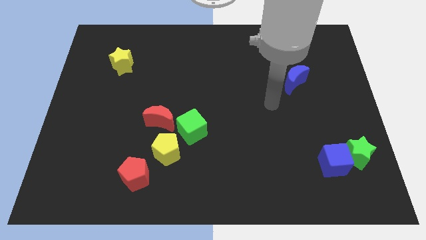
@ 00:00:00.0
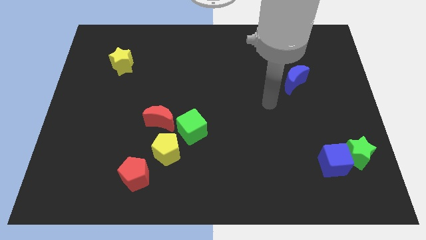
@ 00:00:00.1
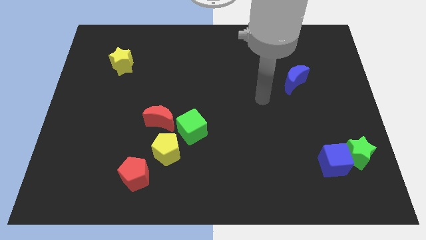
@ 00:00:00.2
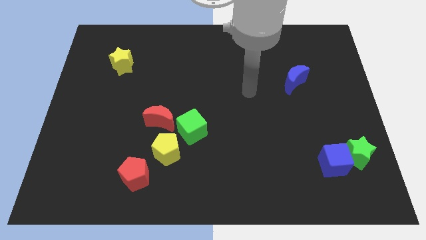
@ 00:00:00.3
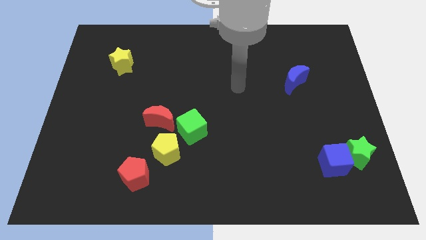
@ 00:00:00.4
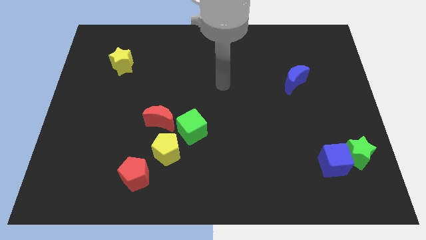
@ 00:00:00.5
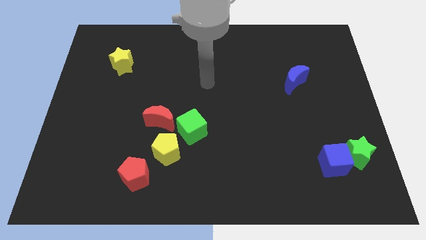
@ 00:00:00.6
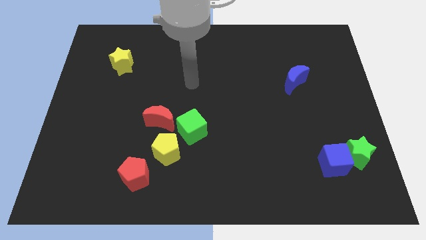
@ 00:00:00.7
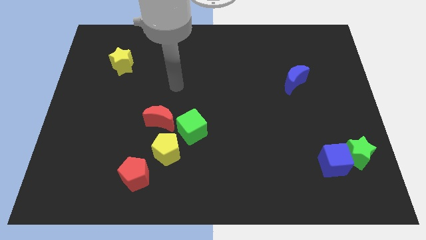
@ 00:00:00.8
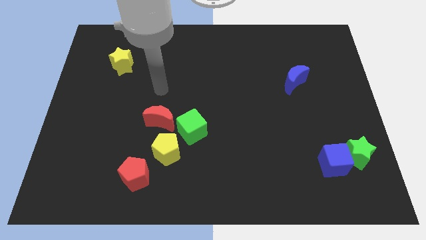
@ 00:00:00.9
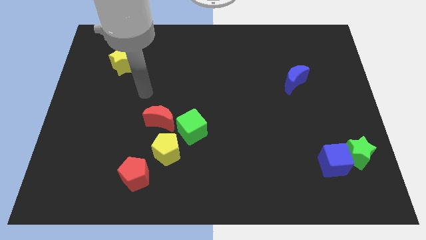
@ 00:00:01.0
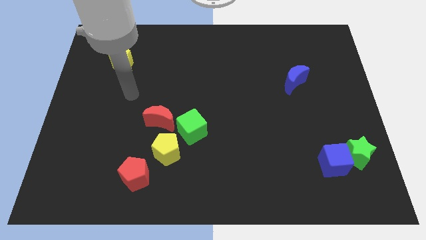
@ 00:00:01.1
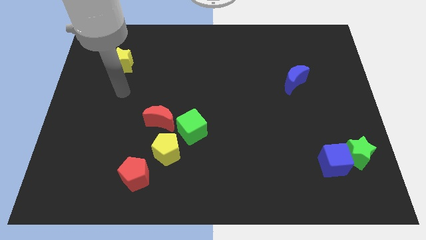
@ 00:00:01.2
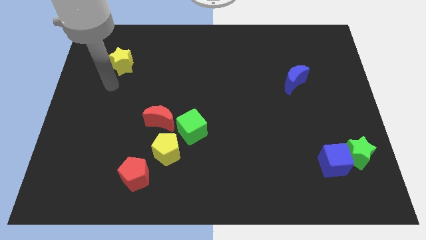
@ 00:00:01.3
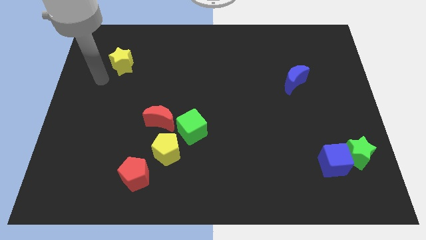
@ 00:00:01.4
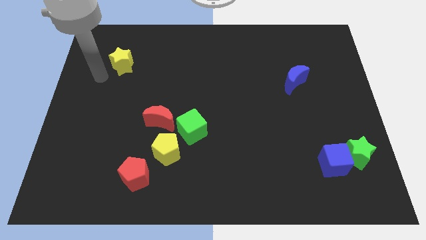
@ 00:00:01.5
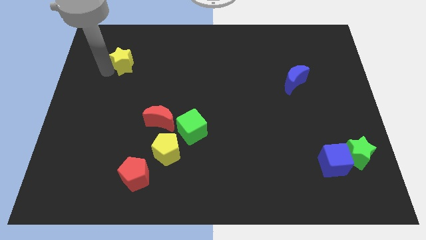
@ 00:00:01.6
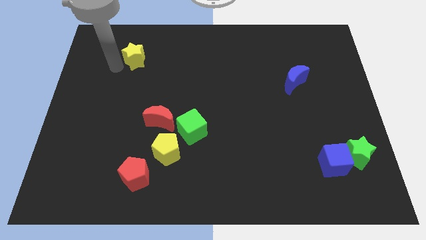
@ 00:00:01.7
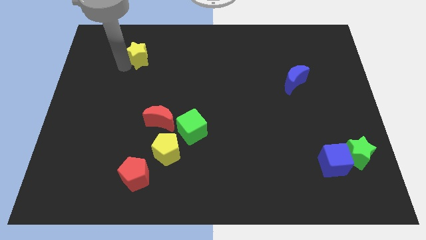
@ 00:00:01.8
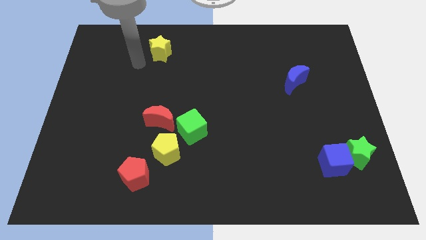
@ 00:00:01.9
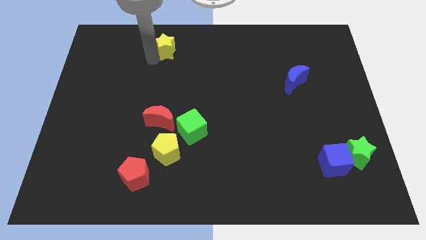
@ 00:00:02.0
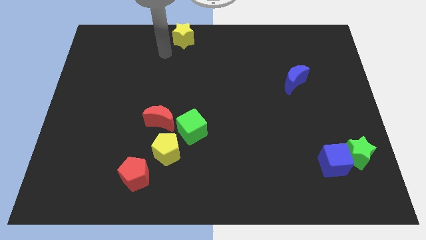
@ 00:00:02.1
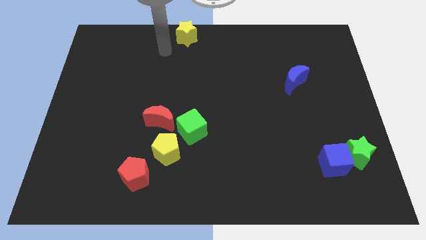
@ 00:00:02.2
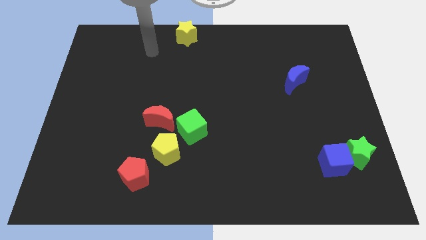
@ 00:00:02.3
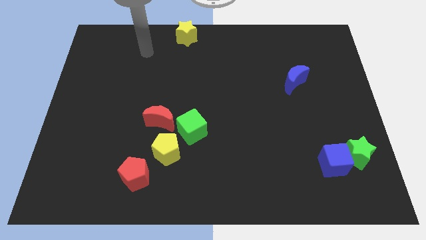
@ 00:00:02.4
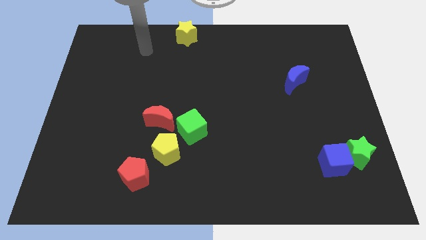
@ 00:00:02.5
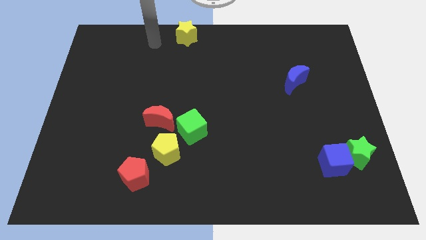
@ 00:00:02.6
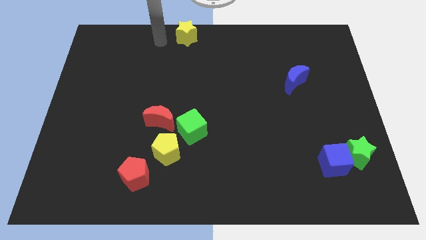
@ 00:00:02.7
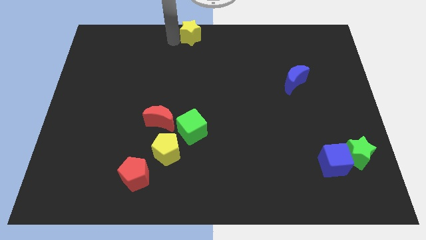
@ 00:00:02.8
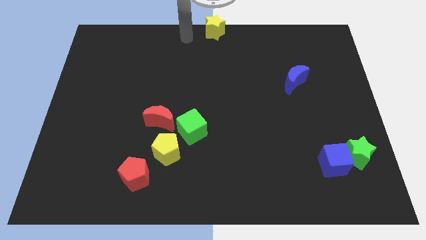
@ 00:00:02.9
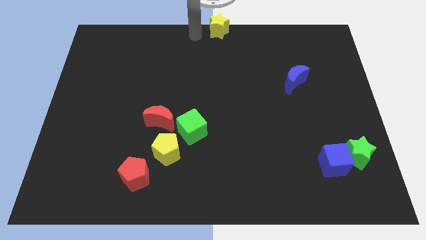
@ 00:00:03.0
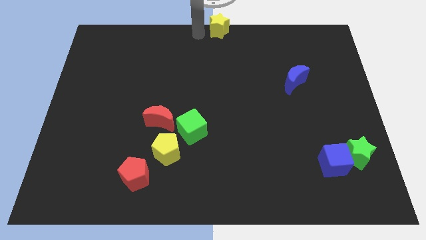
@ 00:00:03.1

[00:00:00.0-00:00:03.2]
place the yellow star at the top center of the board

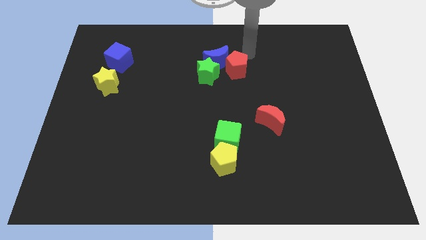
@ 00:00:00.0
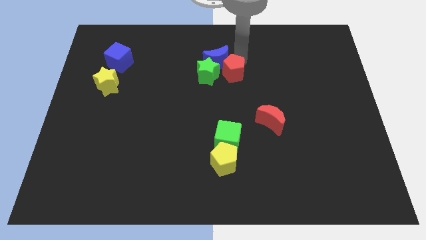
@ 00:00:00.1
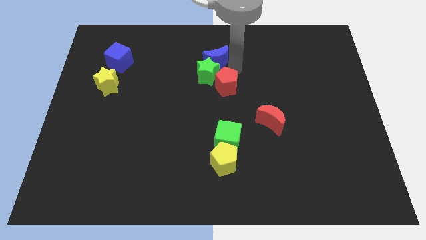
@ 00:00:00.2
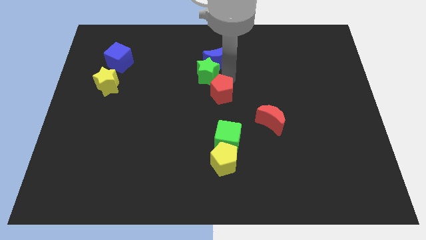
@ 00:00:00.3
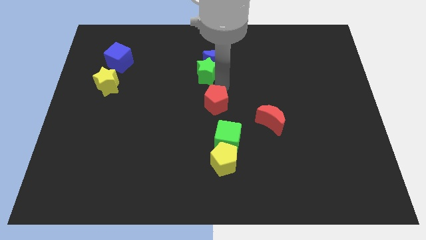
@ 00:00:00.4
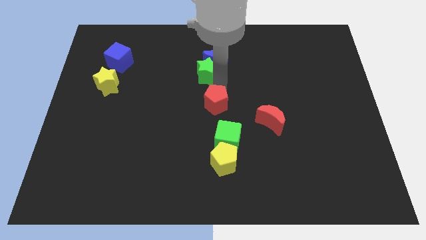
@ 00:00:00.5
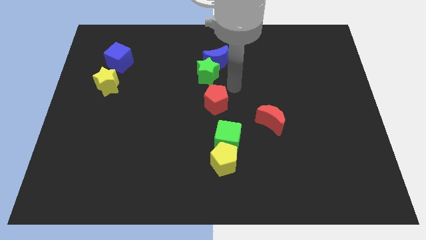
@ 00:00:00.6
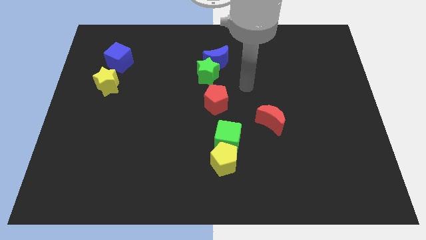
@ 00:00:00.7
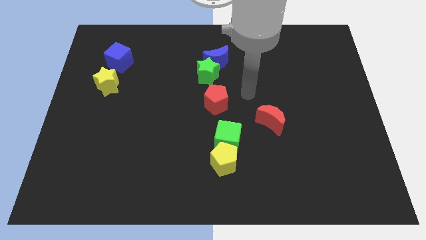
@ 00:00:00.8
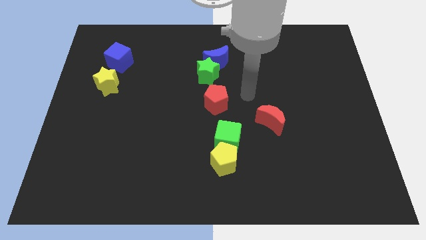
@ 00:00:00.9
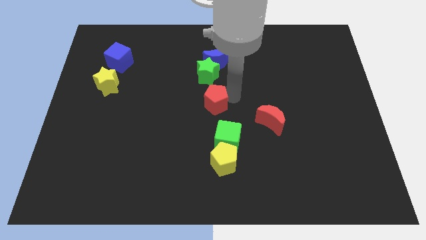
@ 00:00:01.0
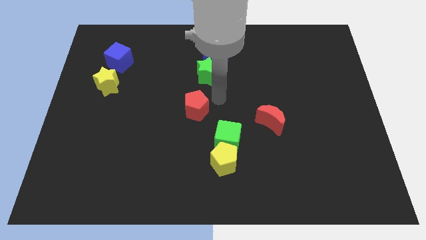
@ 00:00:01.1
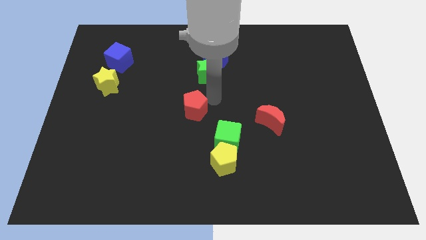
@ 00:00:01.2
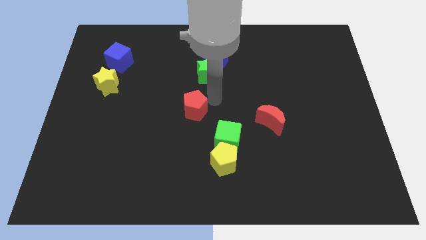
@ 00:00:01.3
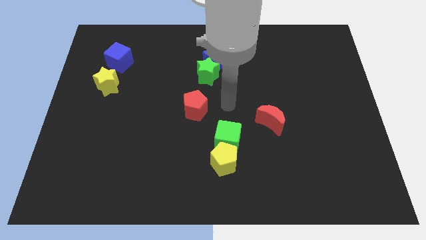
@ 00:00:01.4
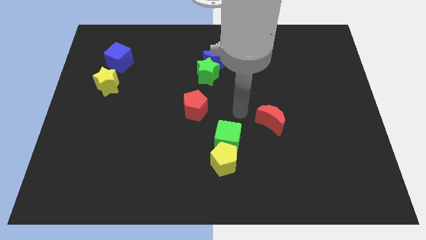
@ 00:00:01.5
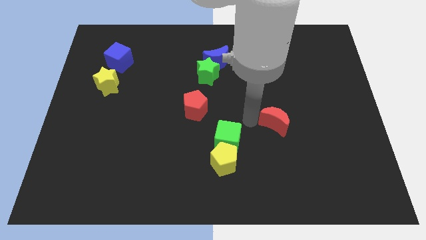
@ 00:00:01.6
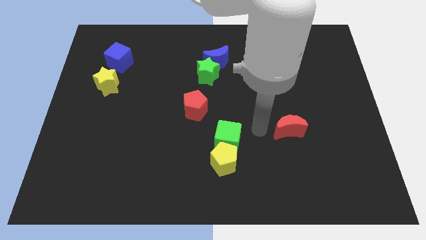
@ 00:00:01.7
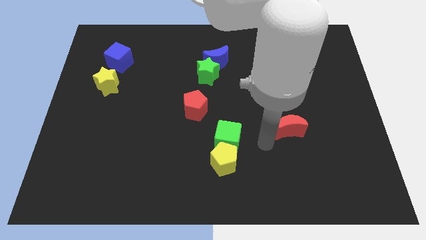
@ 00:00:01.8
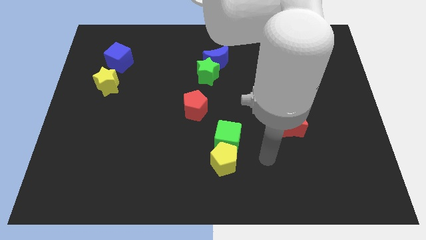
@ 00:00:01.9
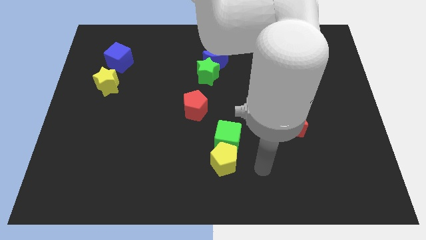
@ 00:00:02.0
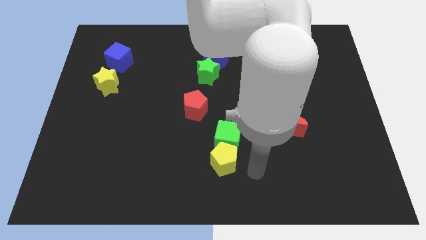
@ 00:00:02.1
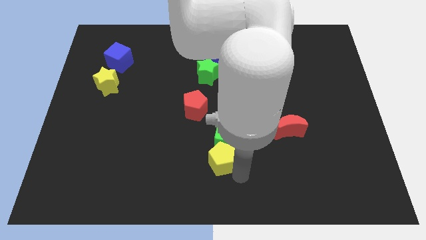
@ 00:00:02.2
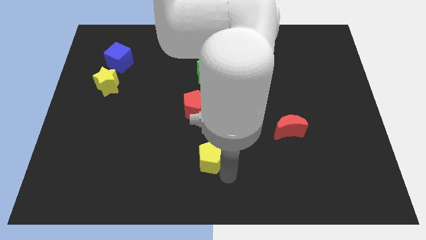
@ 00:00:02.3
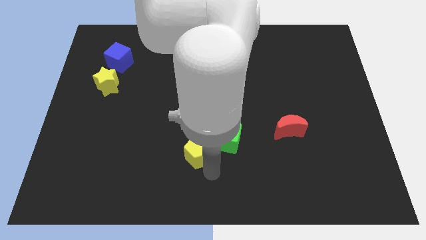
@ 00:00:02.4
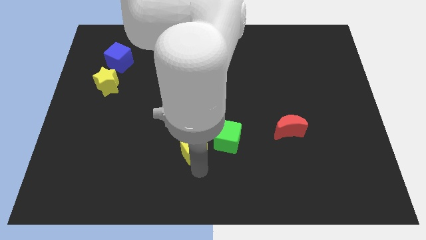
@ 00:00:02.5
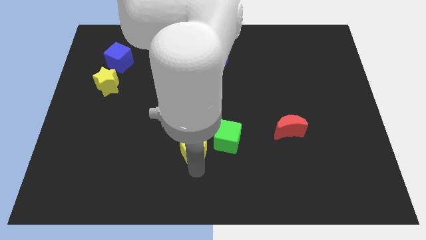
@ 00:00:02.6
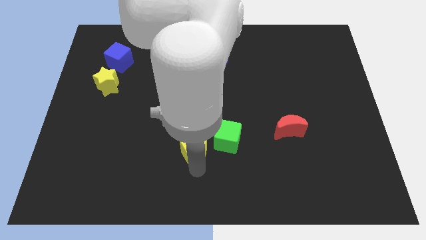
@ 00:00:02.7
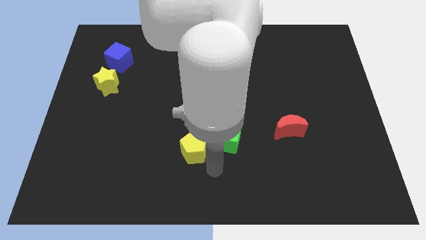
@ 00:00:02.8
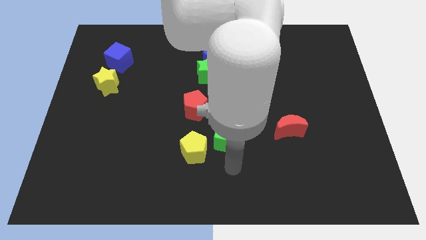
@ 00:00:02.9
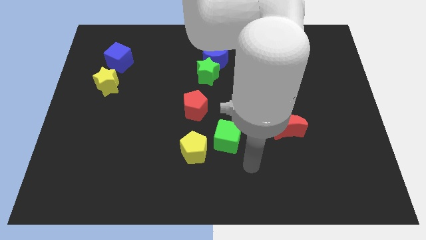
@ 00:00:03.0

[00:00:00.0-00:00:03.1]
move the yellow pentagon vertically bottom to the red pentagon

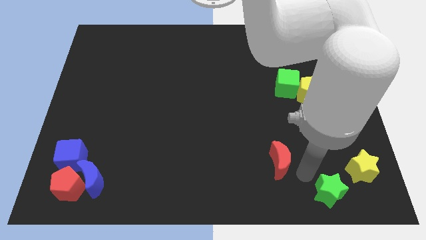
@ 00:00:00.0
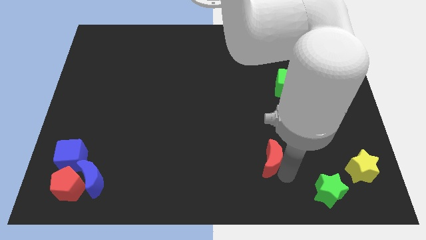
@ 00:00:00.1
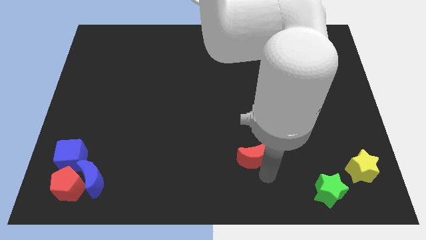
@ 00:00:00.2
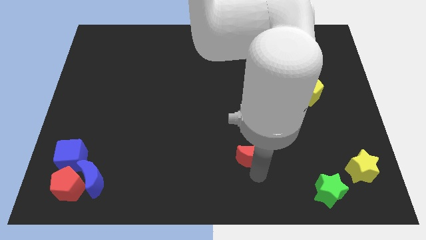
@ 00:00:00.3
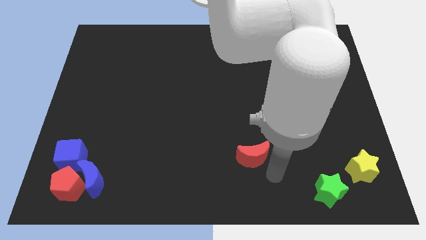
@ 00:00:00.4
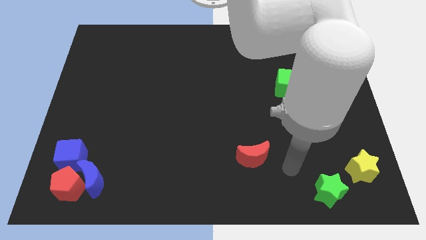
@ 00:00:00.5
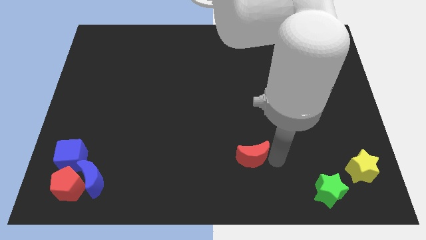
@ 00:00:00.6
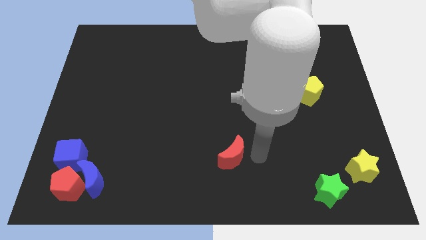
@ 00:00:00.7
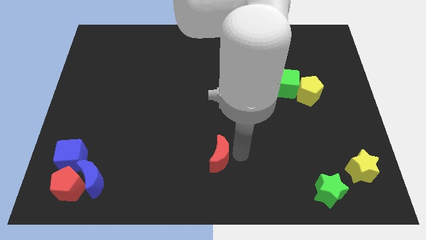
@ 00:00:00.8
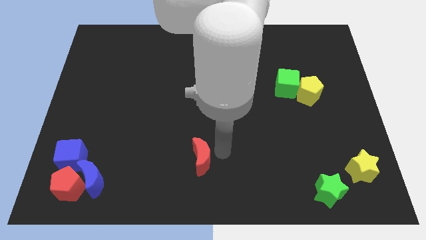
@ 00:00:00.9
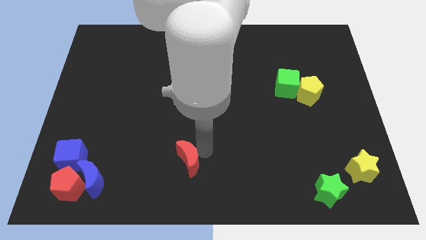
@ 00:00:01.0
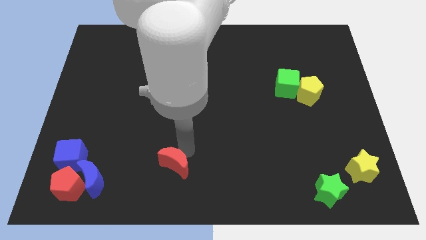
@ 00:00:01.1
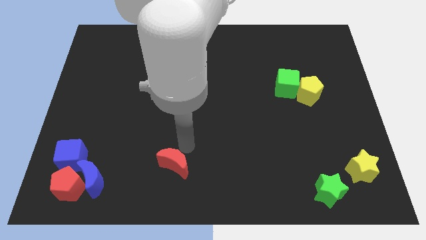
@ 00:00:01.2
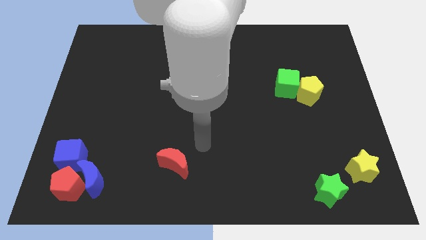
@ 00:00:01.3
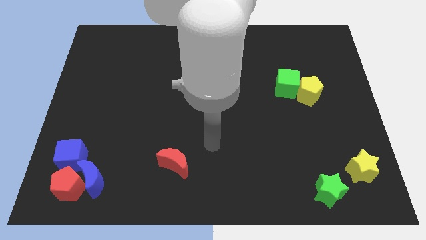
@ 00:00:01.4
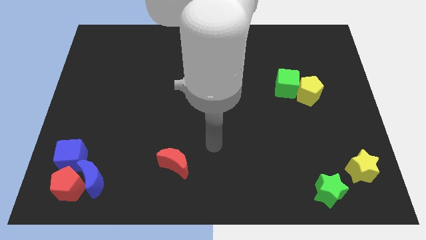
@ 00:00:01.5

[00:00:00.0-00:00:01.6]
move the red moon to the right of blue moon

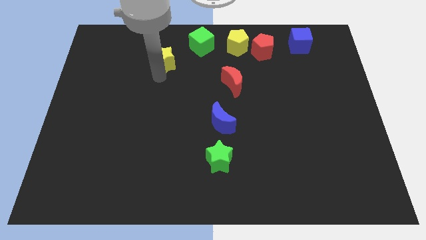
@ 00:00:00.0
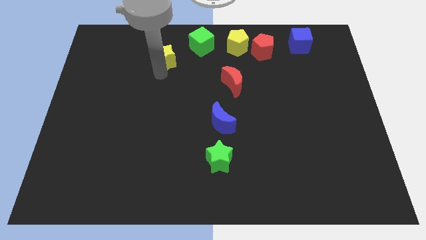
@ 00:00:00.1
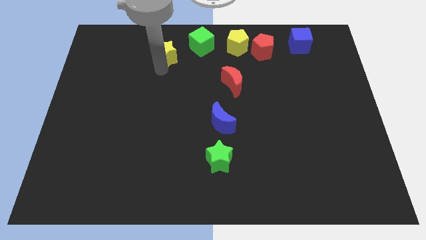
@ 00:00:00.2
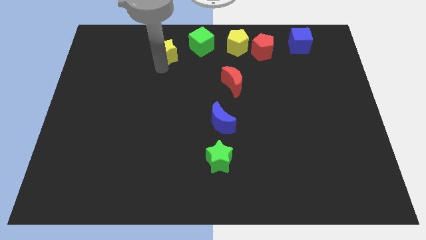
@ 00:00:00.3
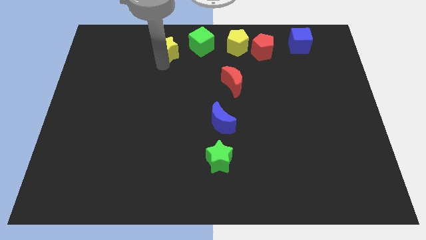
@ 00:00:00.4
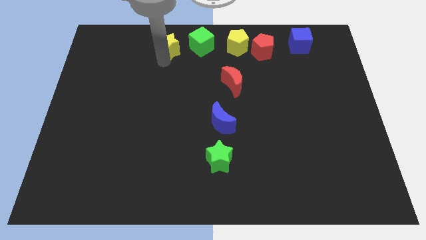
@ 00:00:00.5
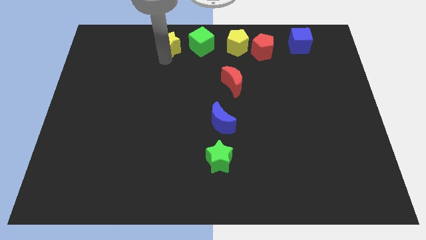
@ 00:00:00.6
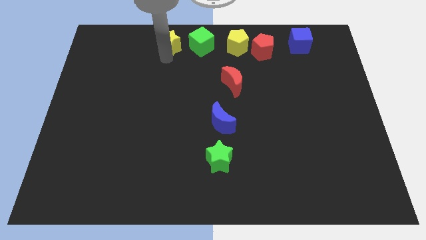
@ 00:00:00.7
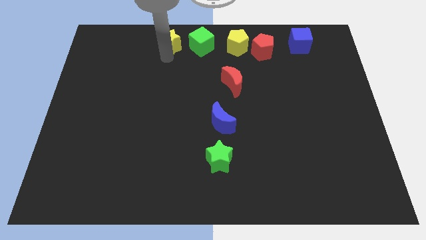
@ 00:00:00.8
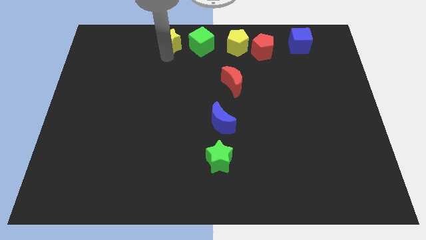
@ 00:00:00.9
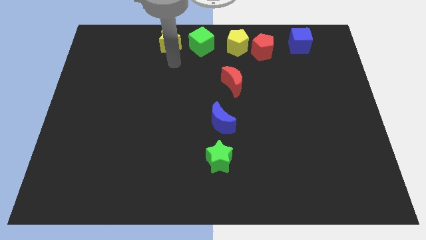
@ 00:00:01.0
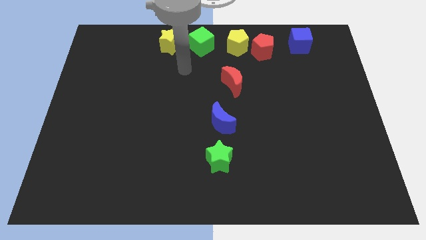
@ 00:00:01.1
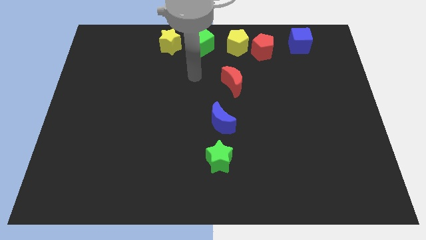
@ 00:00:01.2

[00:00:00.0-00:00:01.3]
move the yellow star to the left of the green cube
